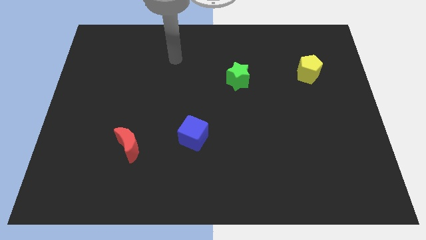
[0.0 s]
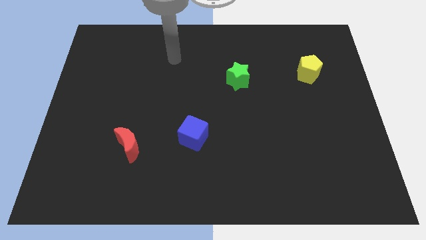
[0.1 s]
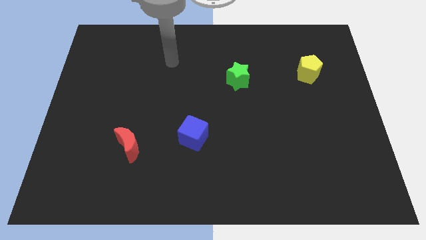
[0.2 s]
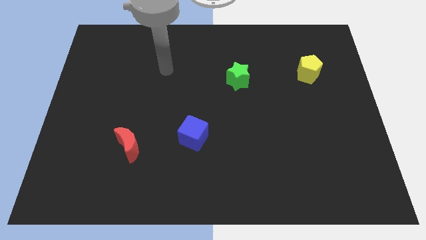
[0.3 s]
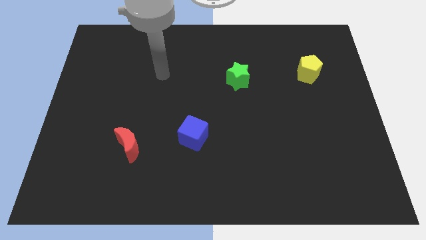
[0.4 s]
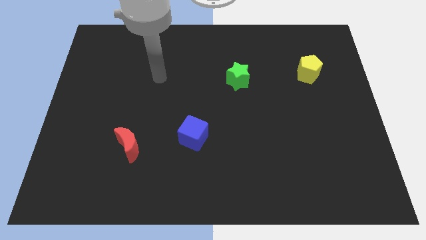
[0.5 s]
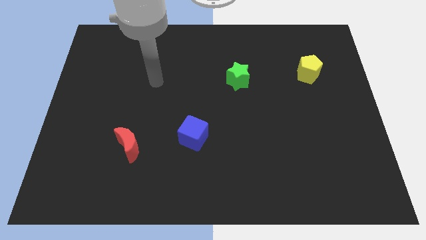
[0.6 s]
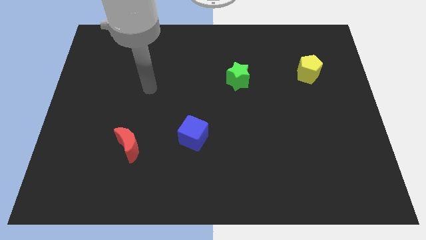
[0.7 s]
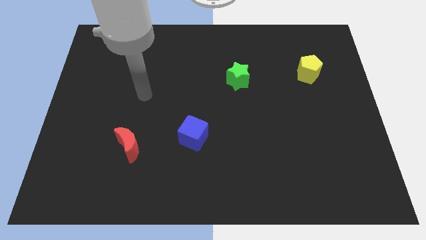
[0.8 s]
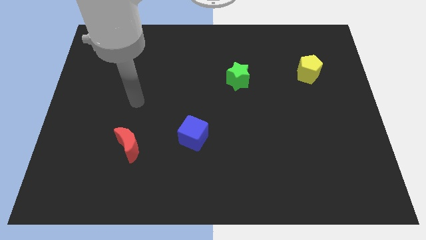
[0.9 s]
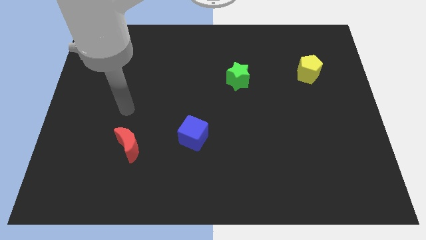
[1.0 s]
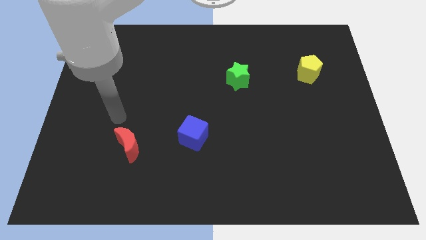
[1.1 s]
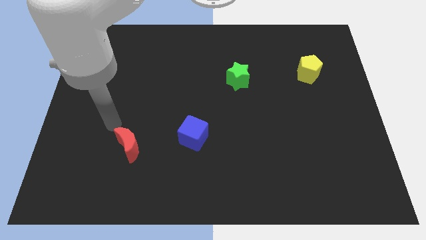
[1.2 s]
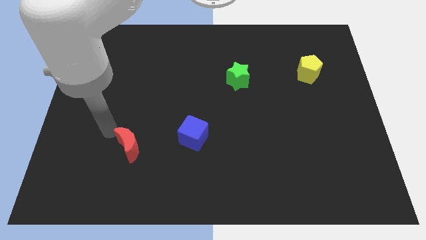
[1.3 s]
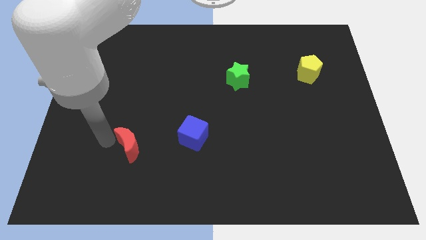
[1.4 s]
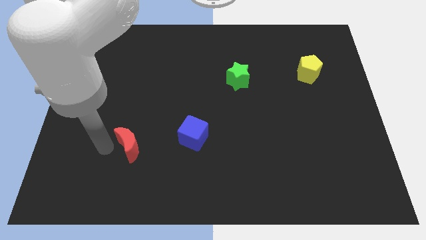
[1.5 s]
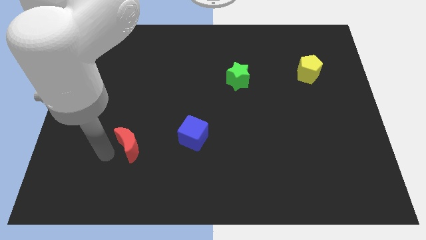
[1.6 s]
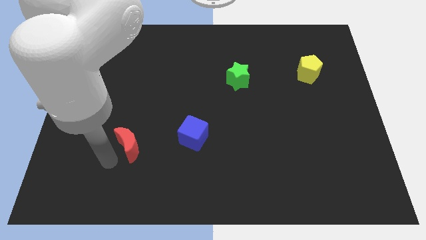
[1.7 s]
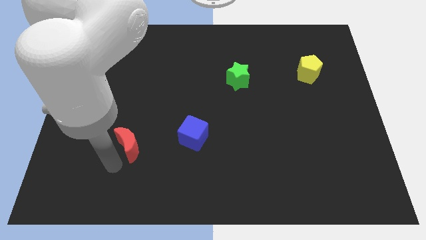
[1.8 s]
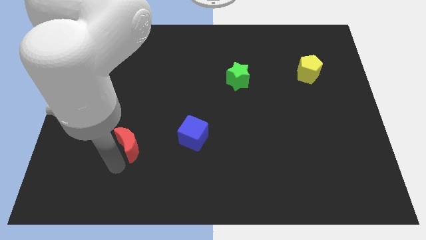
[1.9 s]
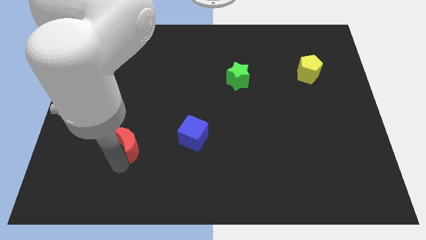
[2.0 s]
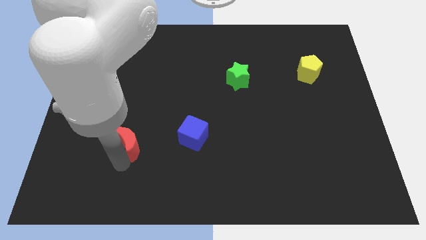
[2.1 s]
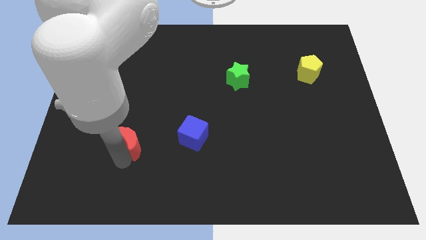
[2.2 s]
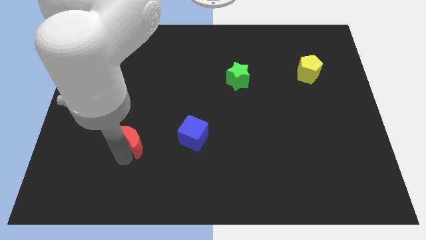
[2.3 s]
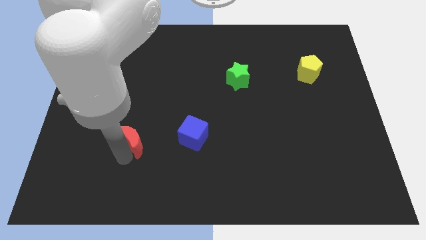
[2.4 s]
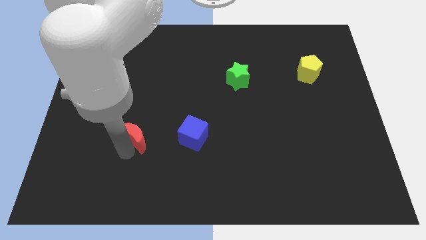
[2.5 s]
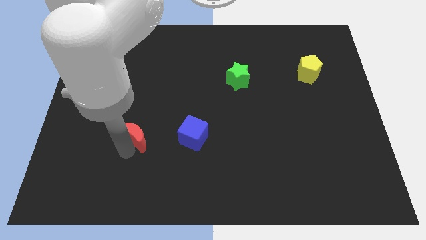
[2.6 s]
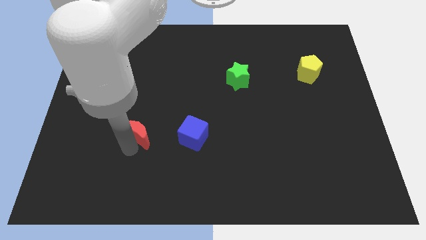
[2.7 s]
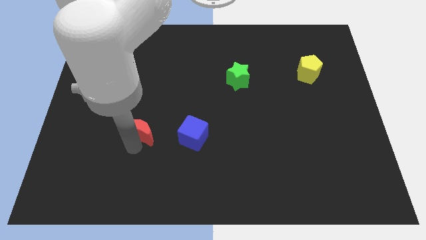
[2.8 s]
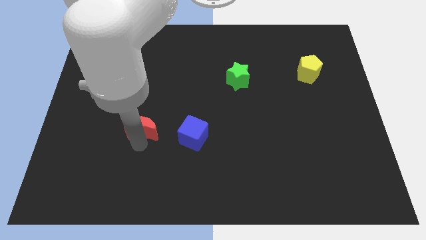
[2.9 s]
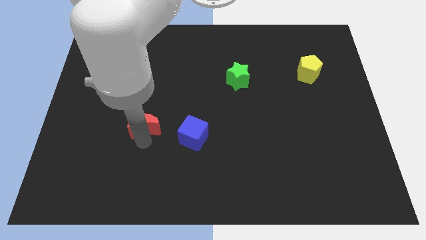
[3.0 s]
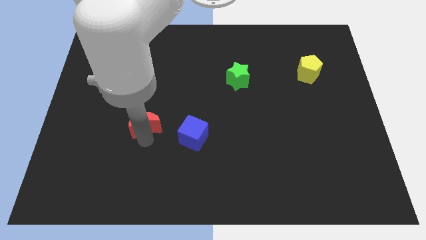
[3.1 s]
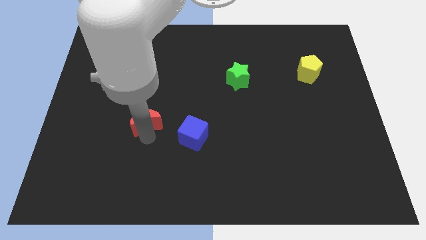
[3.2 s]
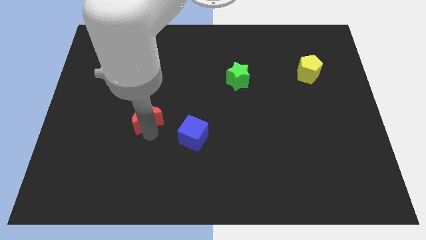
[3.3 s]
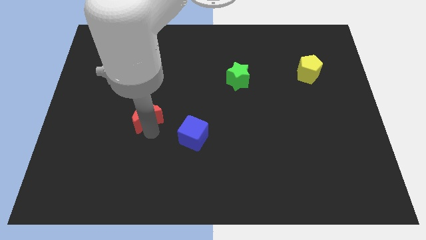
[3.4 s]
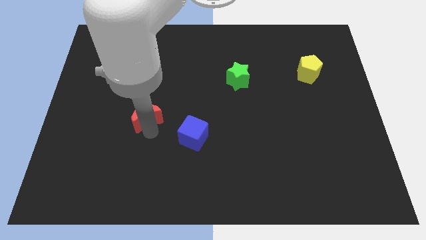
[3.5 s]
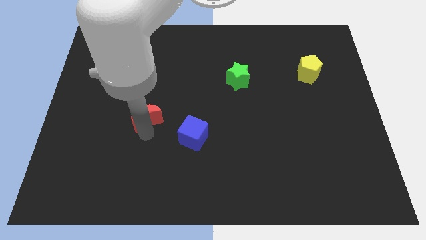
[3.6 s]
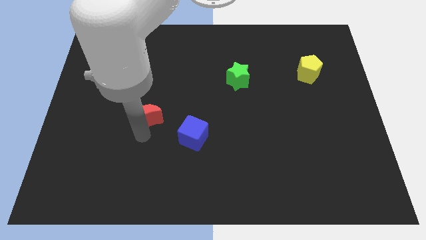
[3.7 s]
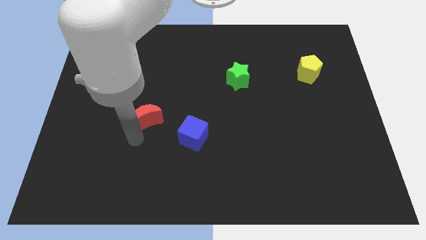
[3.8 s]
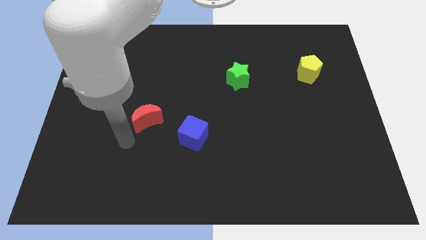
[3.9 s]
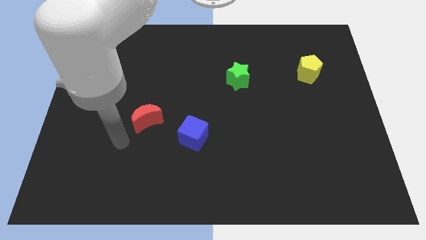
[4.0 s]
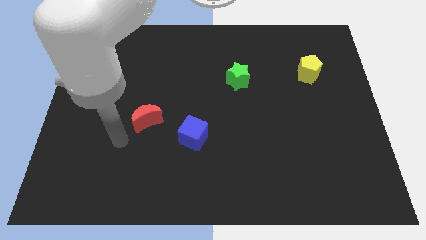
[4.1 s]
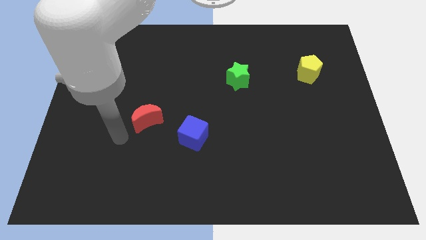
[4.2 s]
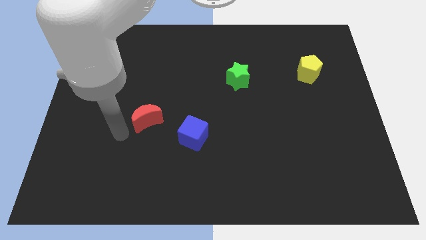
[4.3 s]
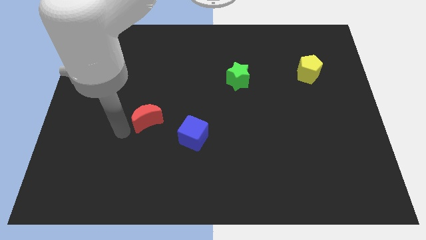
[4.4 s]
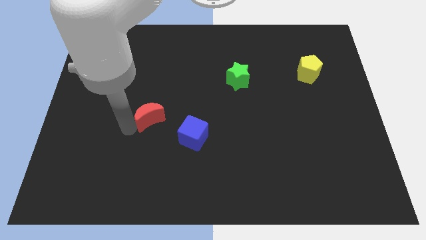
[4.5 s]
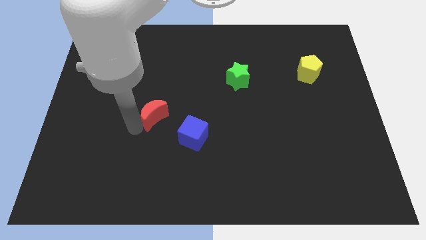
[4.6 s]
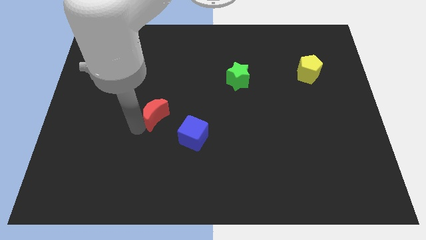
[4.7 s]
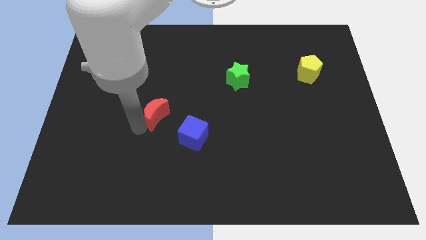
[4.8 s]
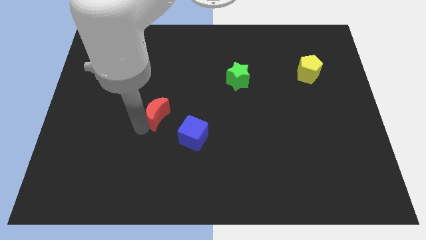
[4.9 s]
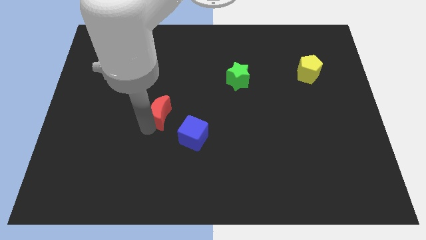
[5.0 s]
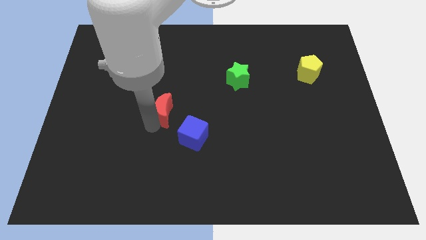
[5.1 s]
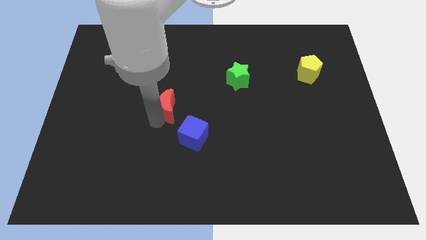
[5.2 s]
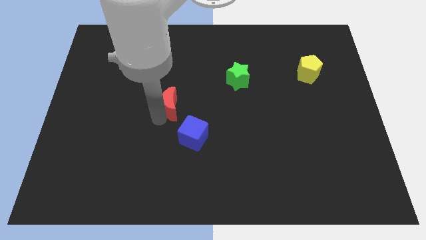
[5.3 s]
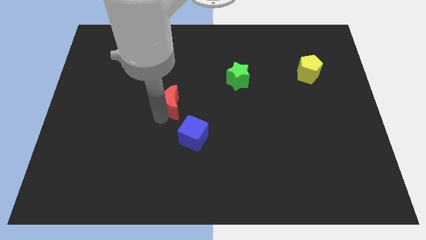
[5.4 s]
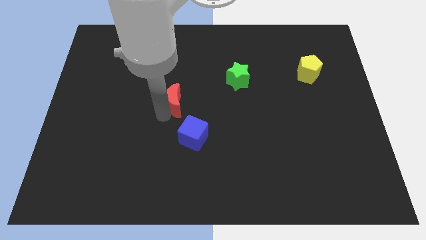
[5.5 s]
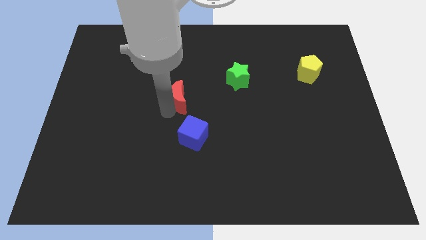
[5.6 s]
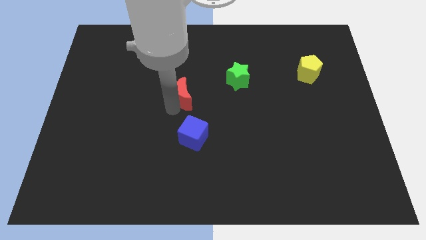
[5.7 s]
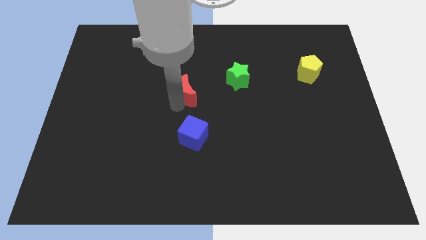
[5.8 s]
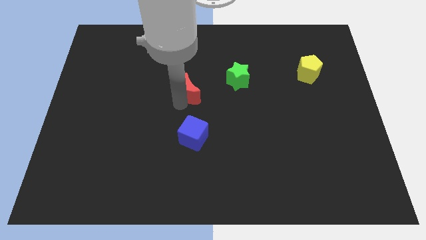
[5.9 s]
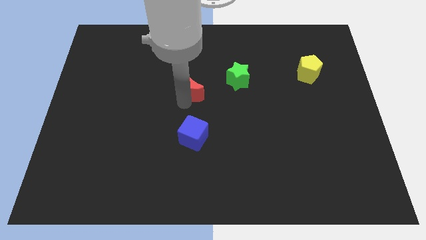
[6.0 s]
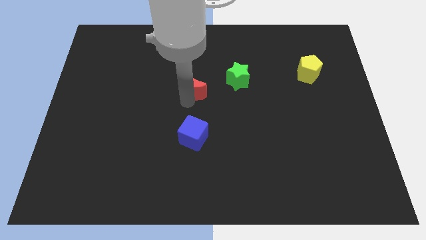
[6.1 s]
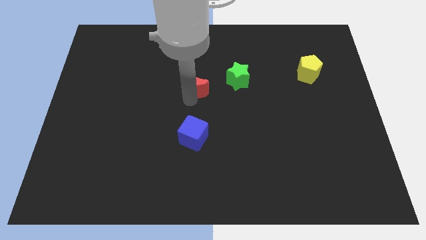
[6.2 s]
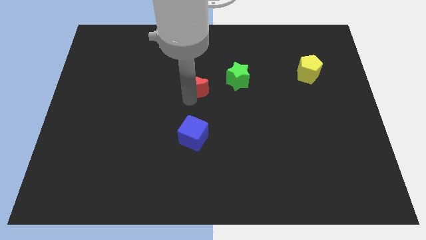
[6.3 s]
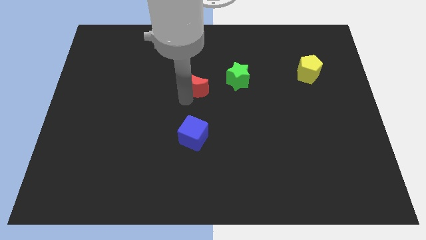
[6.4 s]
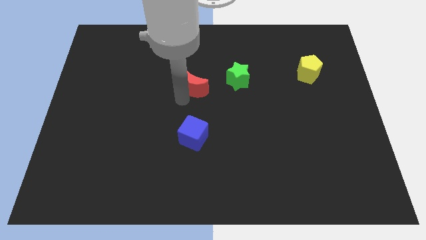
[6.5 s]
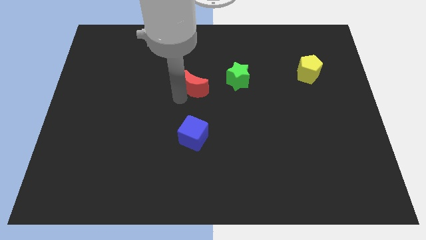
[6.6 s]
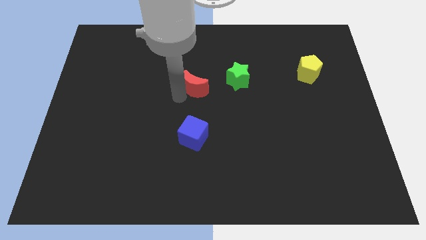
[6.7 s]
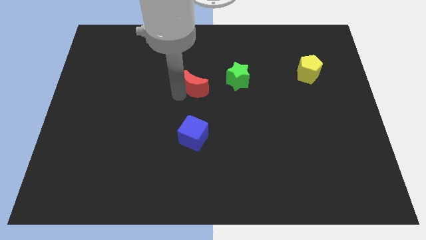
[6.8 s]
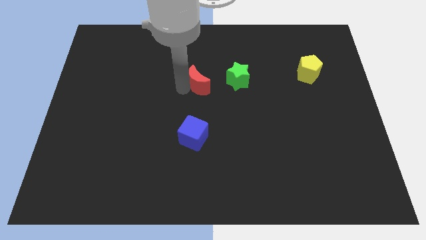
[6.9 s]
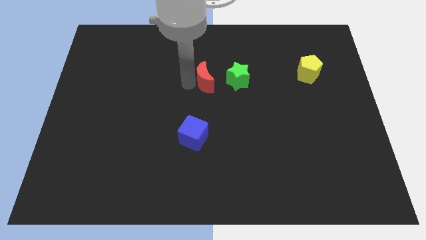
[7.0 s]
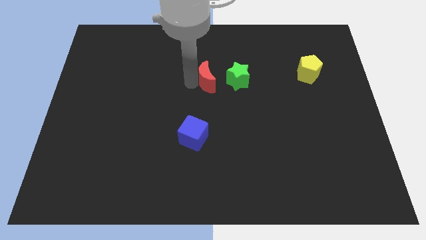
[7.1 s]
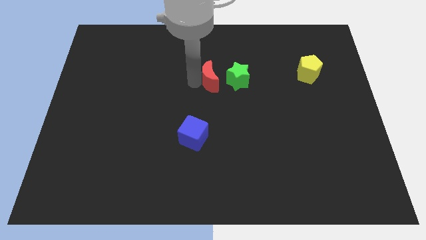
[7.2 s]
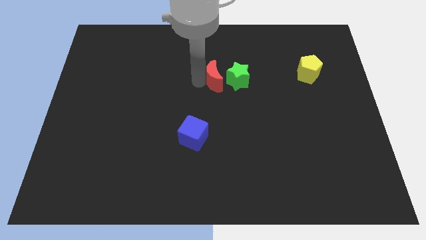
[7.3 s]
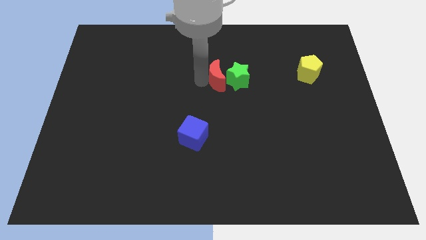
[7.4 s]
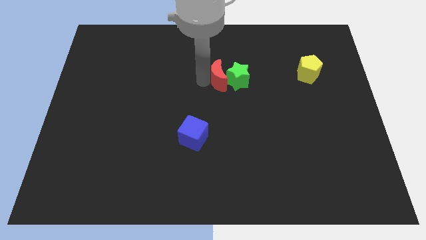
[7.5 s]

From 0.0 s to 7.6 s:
move the red moon towards the green star

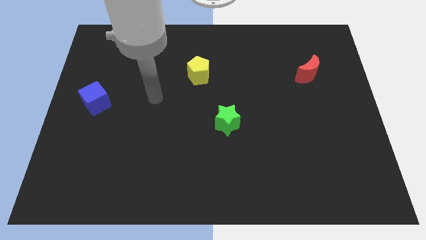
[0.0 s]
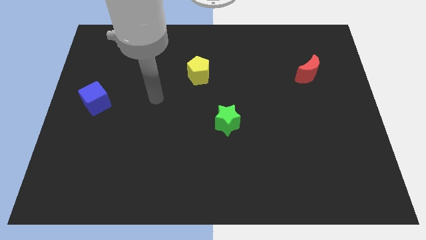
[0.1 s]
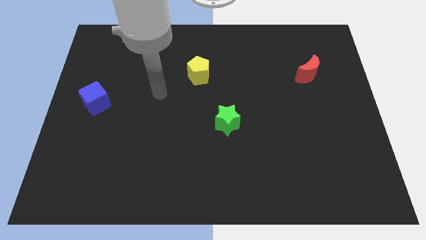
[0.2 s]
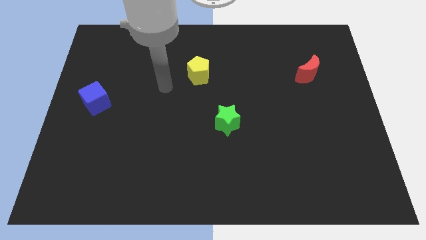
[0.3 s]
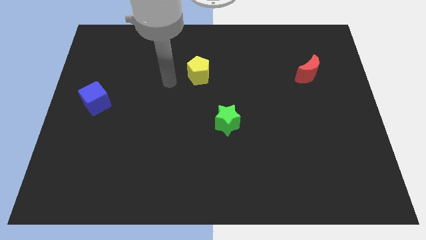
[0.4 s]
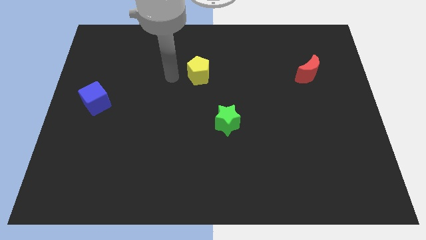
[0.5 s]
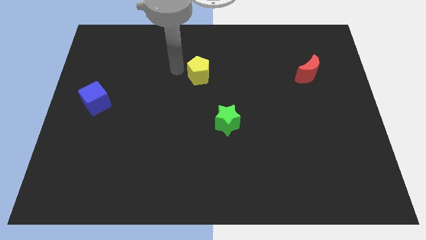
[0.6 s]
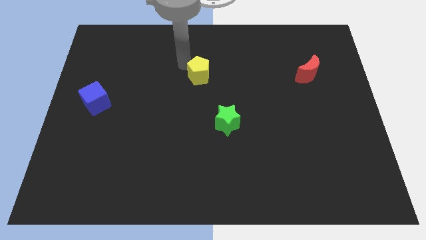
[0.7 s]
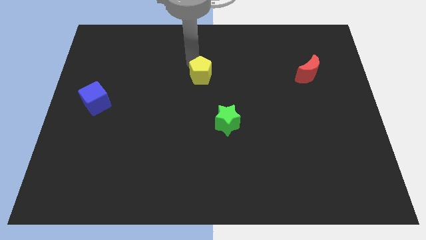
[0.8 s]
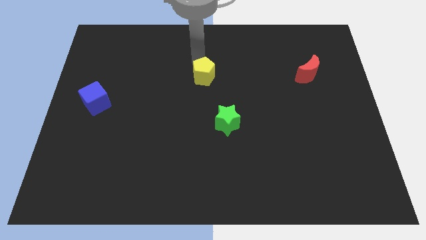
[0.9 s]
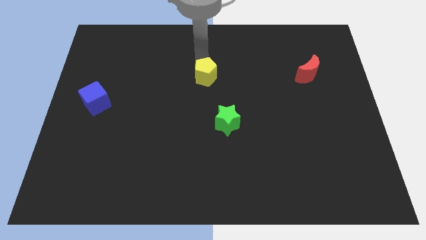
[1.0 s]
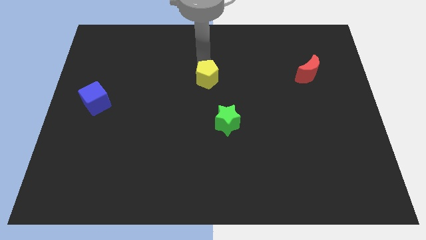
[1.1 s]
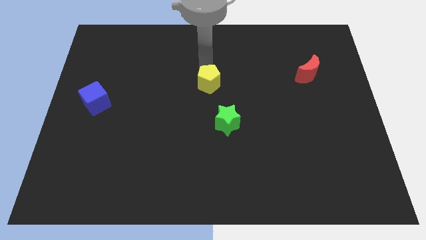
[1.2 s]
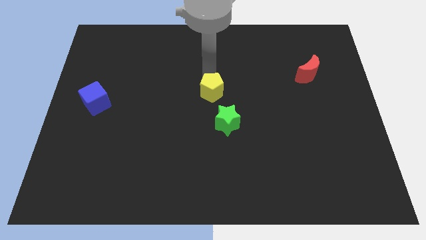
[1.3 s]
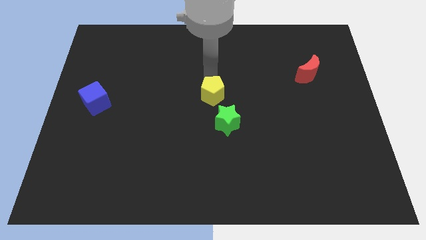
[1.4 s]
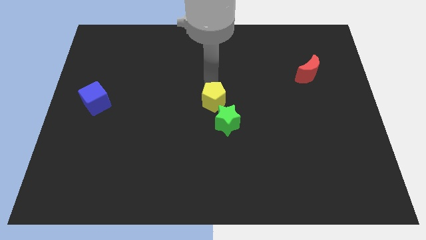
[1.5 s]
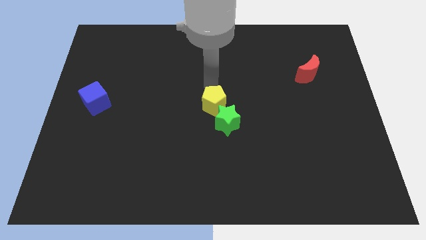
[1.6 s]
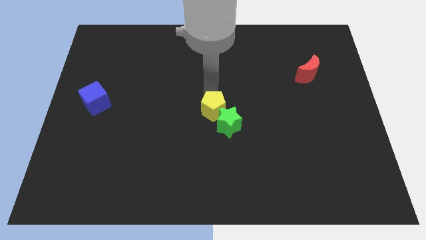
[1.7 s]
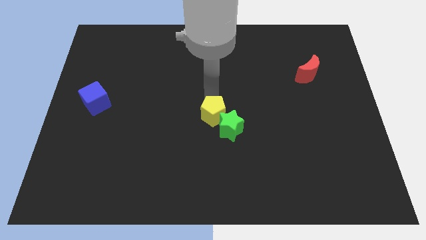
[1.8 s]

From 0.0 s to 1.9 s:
slide the yellow pentagon close to the star
